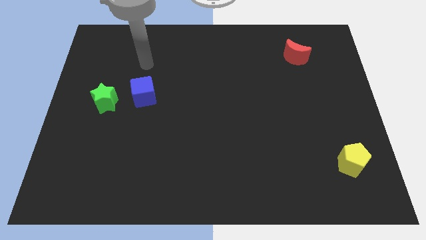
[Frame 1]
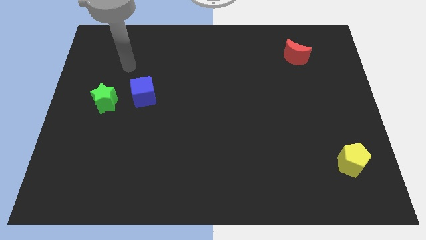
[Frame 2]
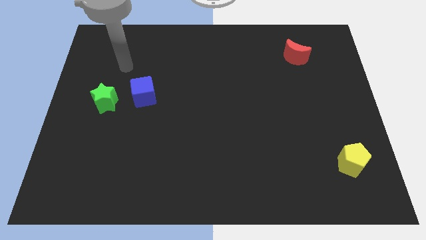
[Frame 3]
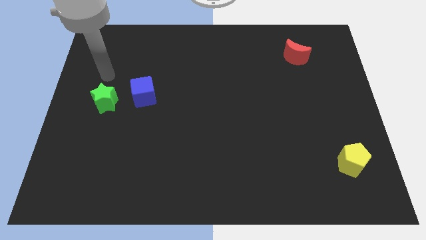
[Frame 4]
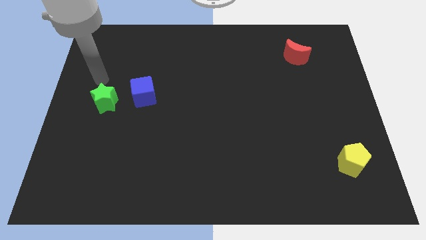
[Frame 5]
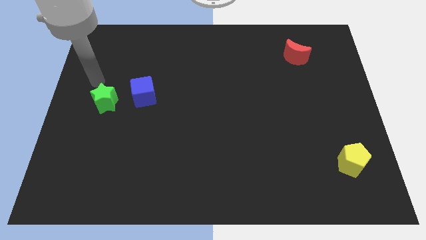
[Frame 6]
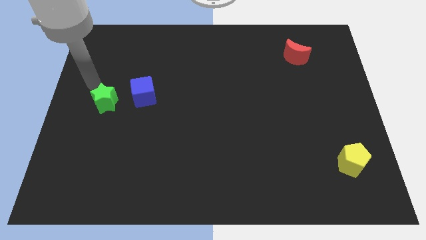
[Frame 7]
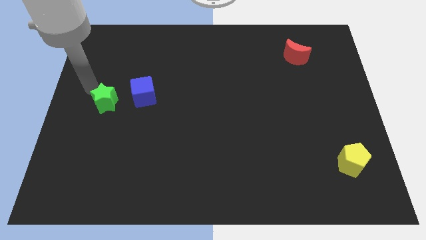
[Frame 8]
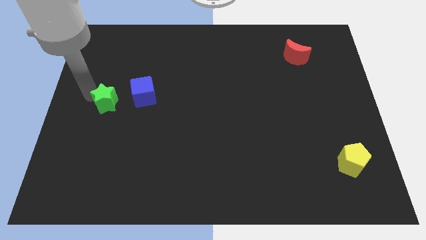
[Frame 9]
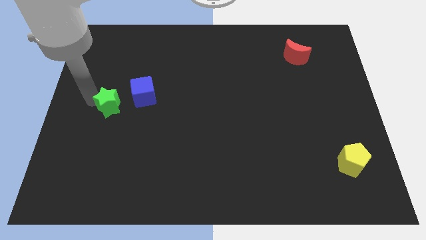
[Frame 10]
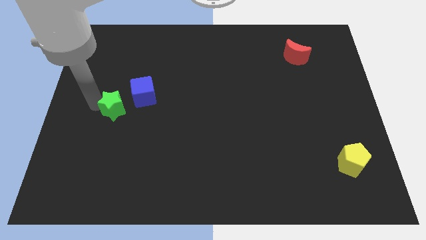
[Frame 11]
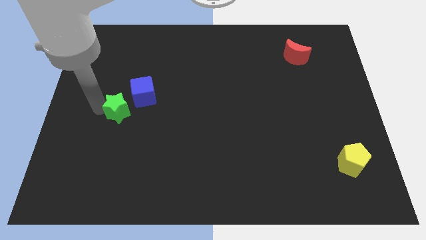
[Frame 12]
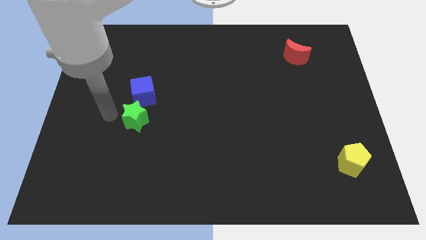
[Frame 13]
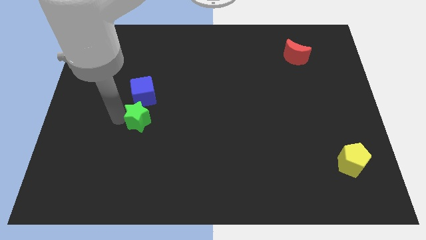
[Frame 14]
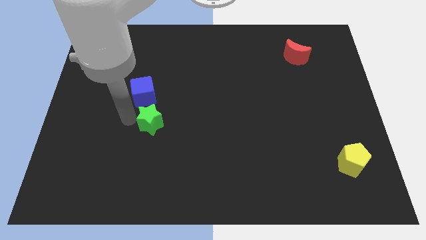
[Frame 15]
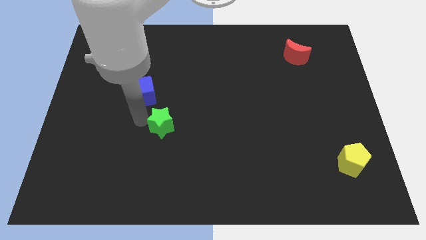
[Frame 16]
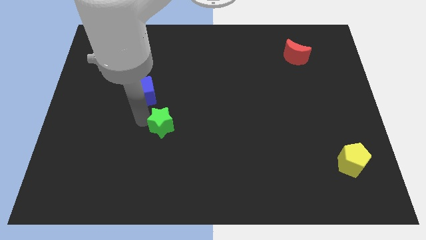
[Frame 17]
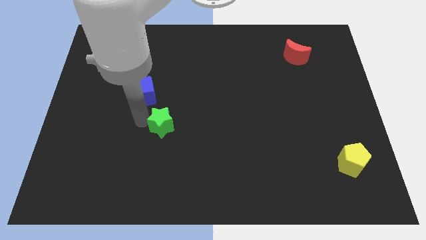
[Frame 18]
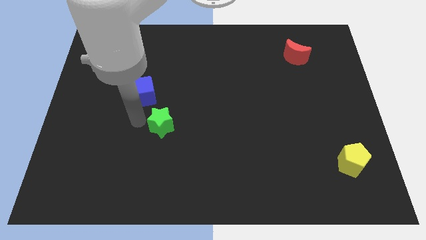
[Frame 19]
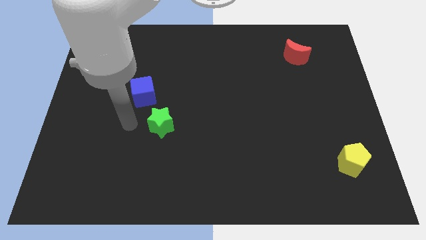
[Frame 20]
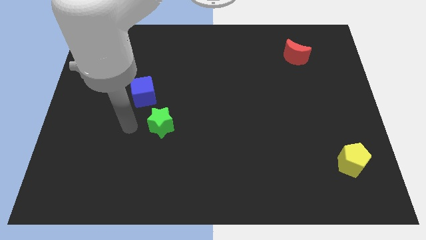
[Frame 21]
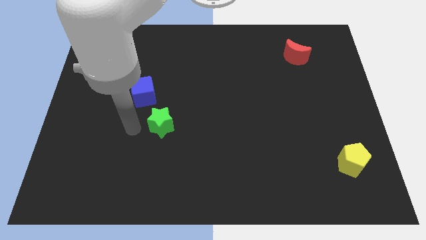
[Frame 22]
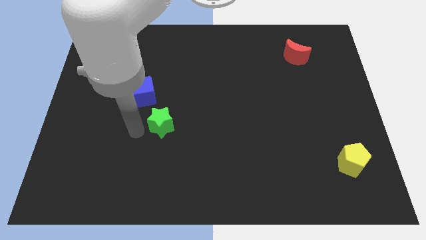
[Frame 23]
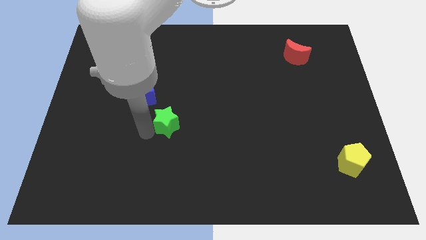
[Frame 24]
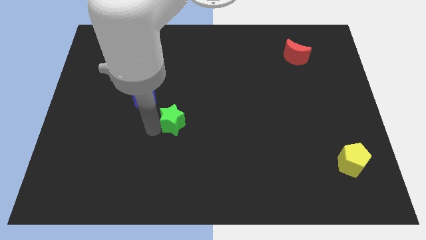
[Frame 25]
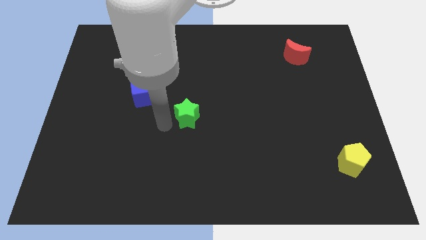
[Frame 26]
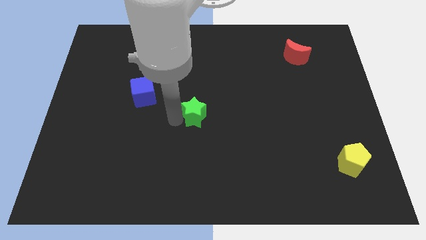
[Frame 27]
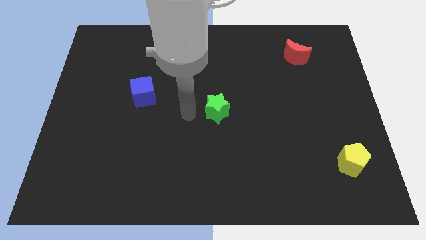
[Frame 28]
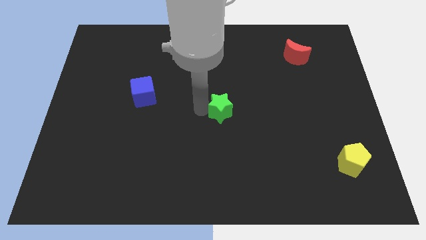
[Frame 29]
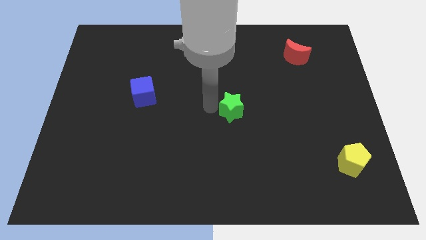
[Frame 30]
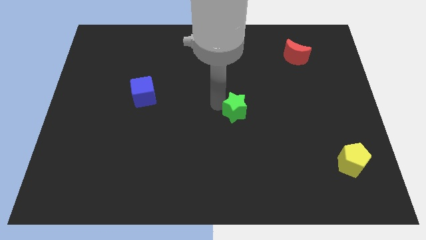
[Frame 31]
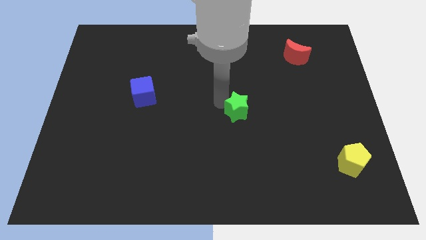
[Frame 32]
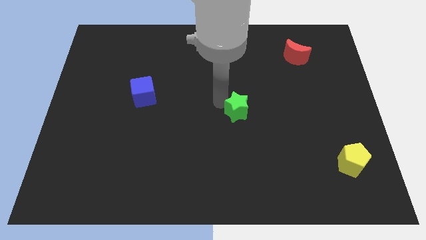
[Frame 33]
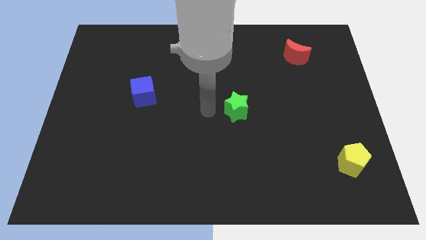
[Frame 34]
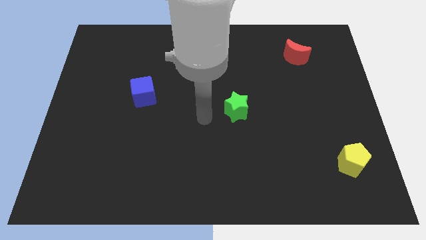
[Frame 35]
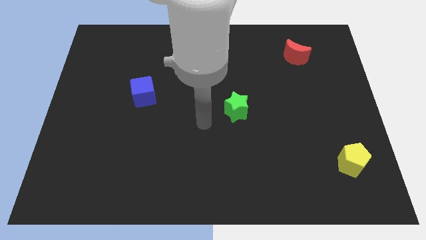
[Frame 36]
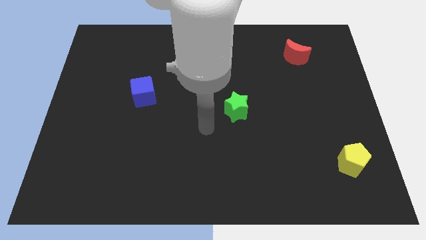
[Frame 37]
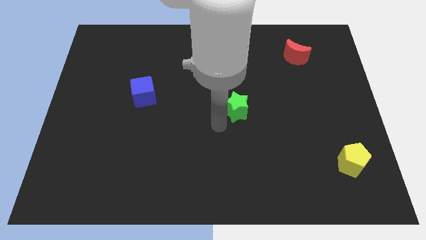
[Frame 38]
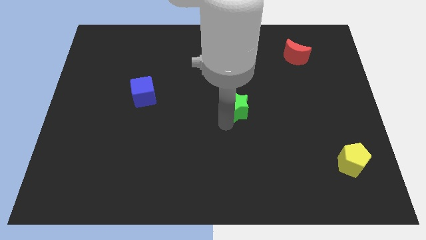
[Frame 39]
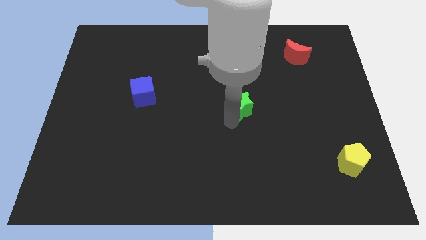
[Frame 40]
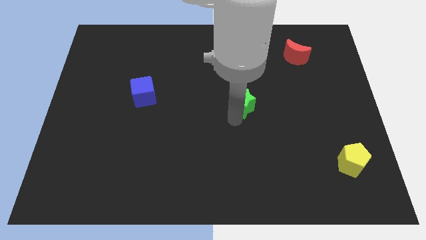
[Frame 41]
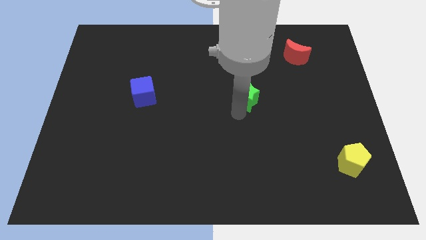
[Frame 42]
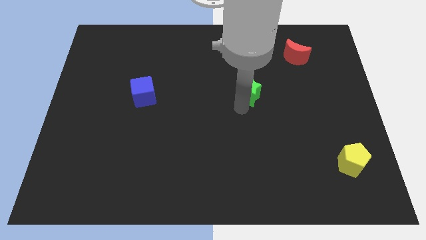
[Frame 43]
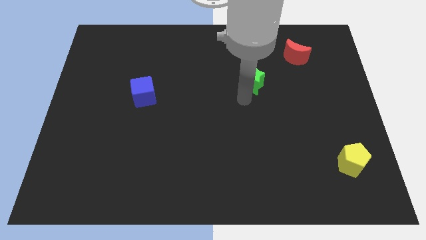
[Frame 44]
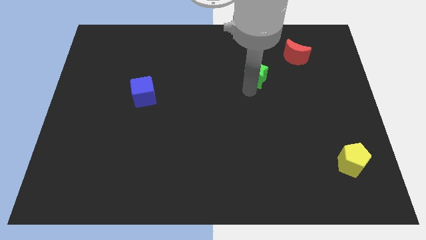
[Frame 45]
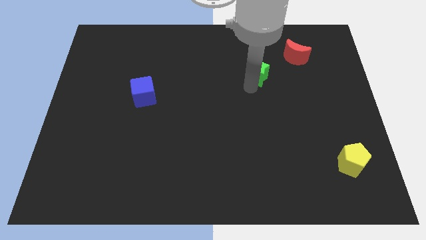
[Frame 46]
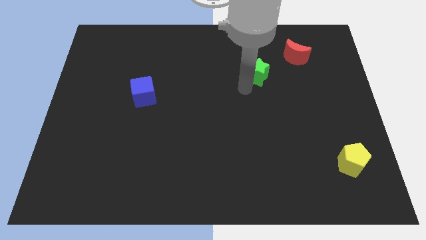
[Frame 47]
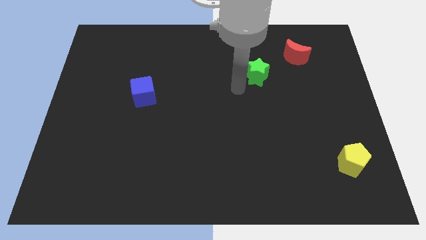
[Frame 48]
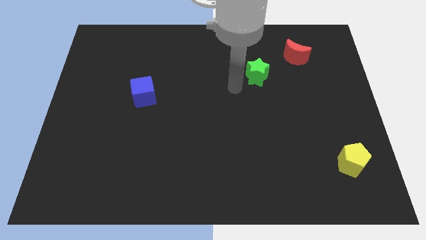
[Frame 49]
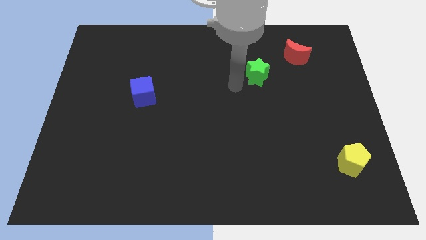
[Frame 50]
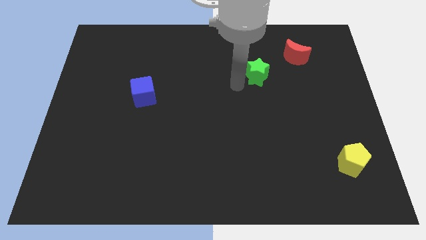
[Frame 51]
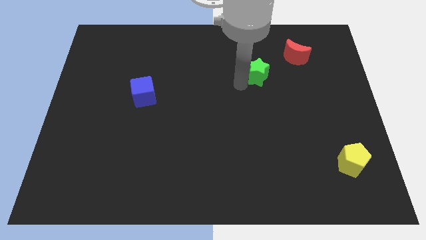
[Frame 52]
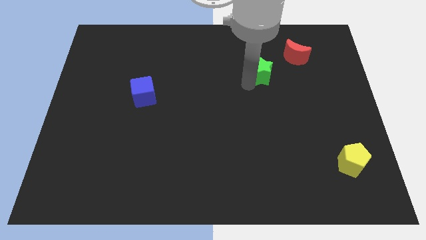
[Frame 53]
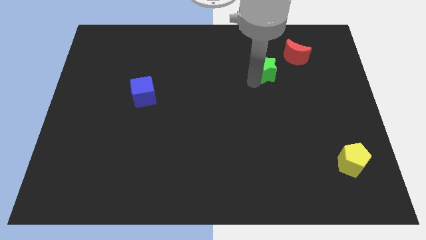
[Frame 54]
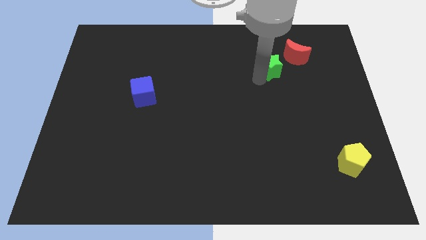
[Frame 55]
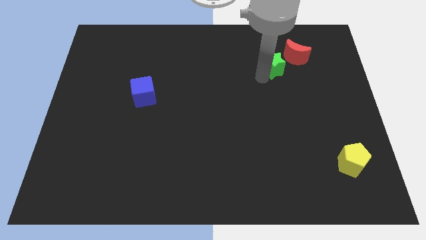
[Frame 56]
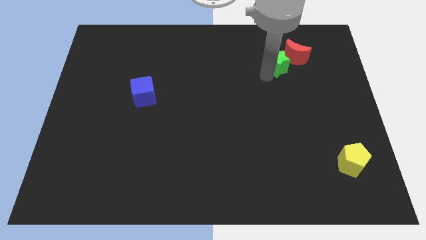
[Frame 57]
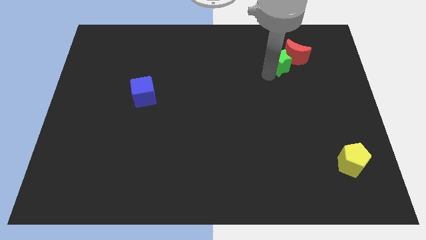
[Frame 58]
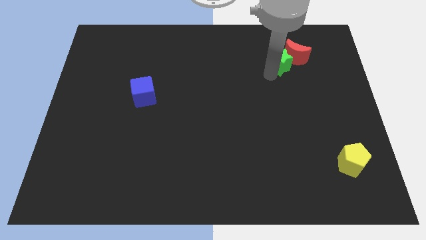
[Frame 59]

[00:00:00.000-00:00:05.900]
push the green block towards the red moon

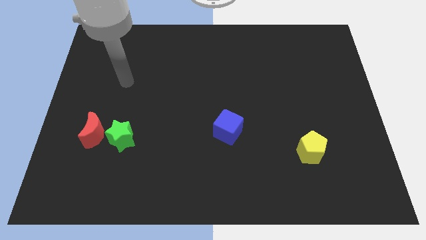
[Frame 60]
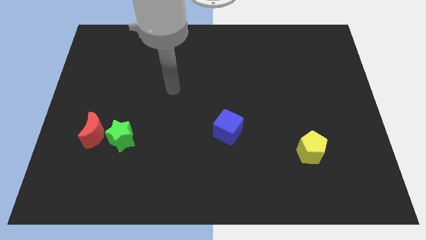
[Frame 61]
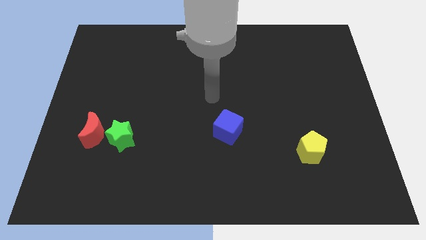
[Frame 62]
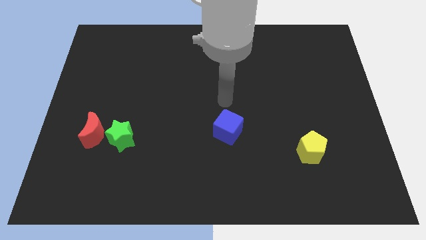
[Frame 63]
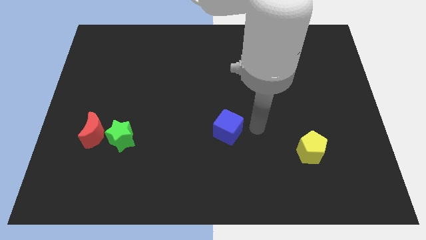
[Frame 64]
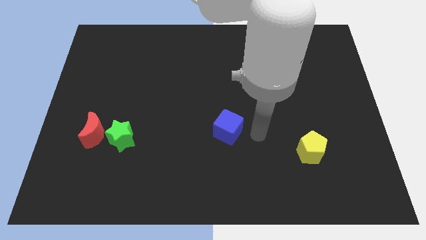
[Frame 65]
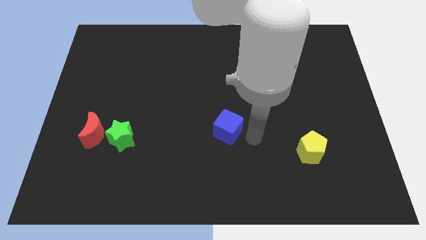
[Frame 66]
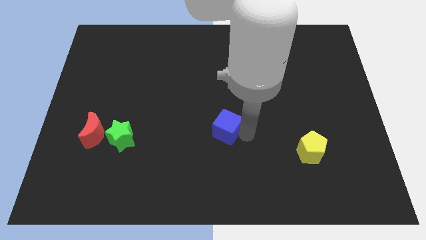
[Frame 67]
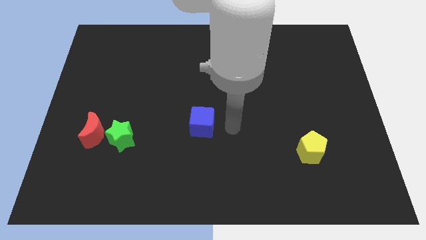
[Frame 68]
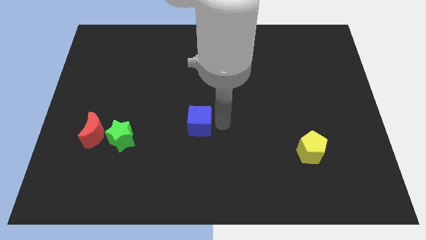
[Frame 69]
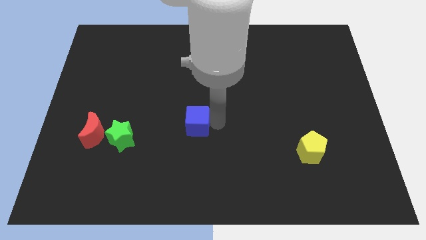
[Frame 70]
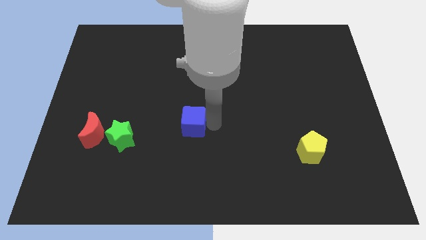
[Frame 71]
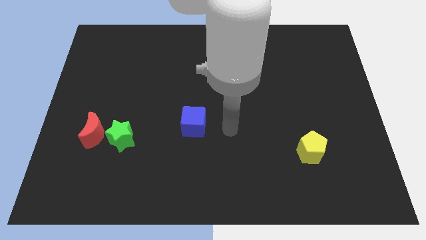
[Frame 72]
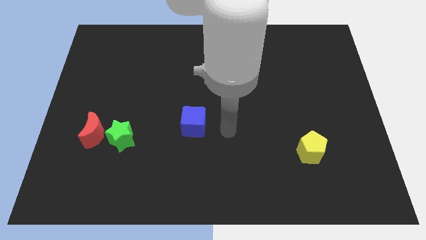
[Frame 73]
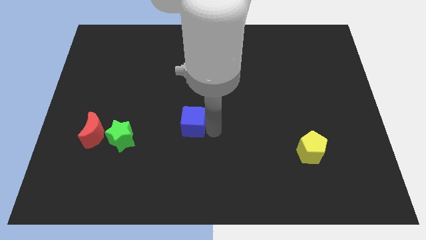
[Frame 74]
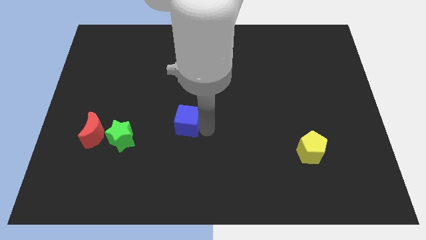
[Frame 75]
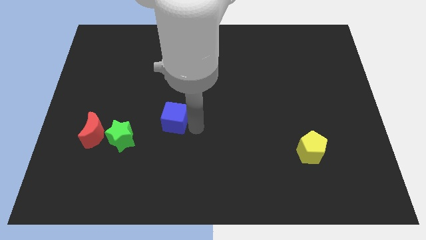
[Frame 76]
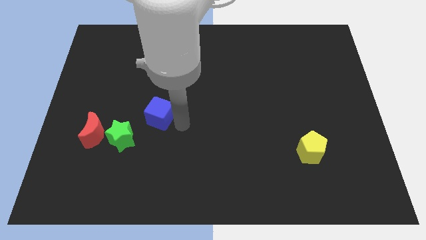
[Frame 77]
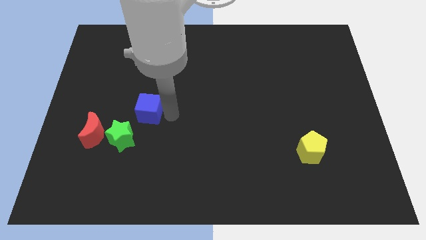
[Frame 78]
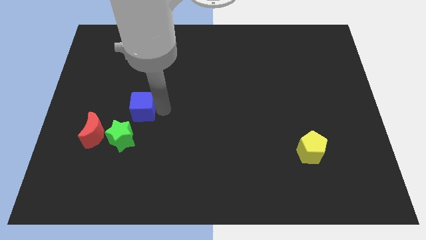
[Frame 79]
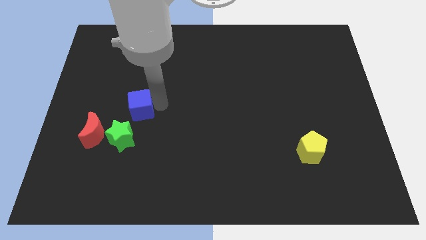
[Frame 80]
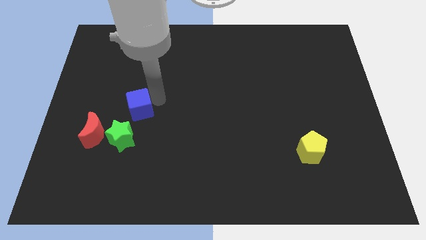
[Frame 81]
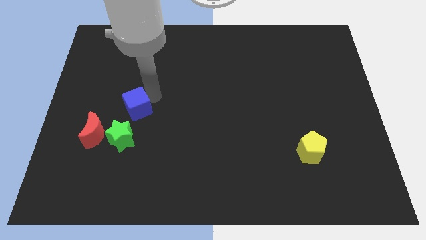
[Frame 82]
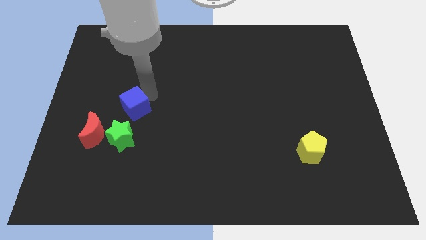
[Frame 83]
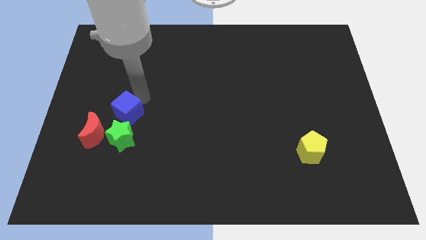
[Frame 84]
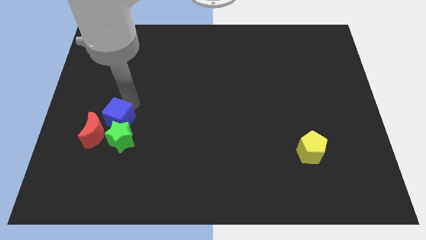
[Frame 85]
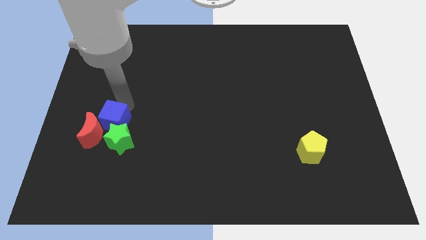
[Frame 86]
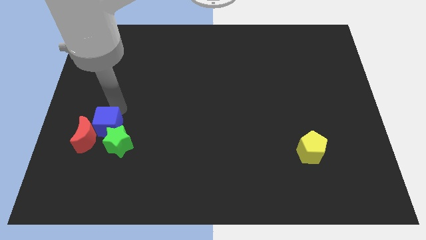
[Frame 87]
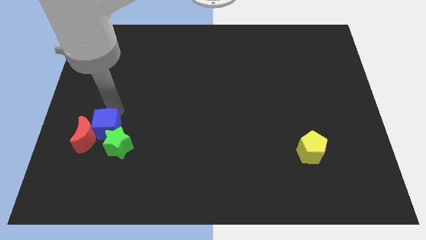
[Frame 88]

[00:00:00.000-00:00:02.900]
slide the blue cube to the red block
